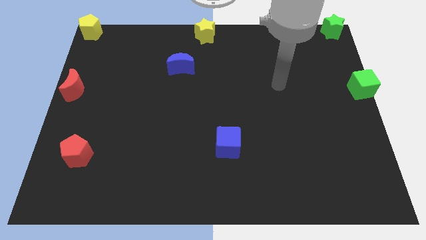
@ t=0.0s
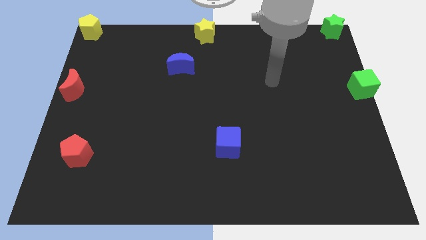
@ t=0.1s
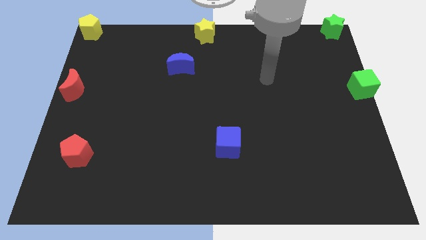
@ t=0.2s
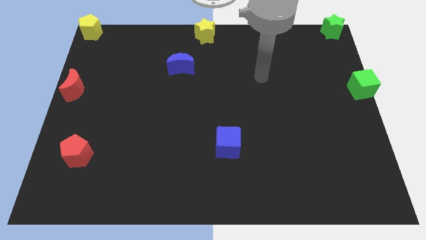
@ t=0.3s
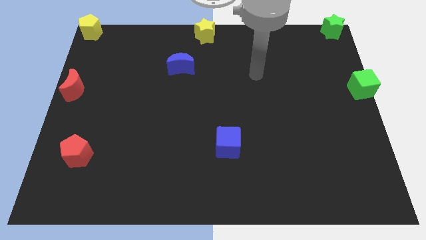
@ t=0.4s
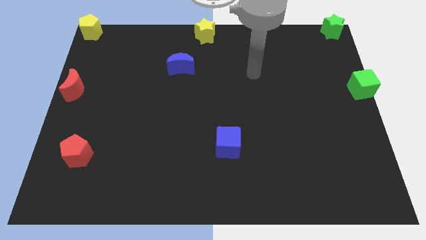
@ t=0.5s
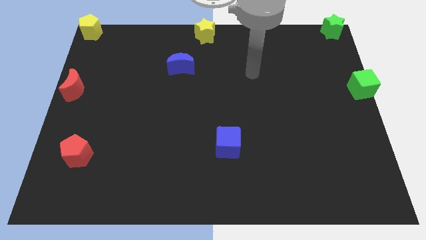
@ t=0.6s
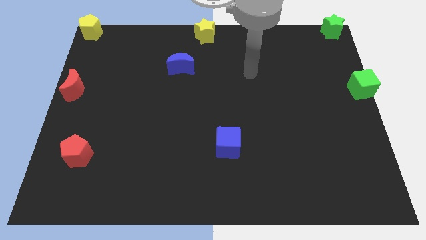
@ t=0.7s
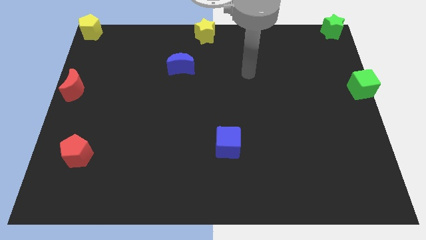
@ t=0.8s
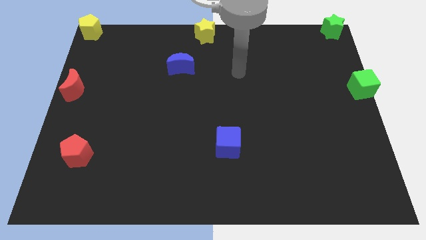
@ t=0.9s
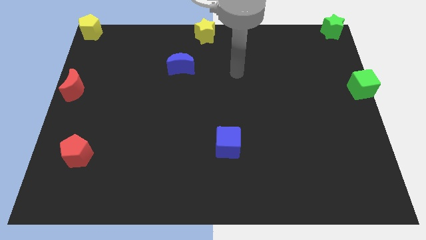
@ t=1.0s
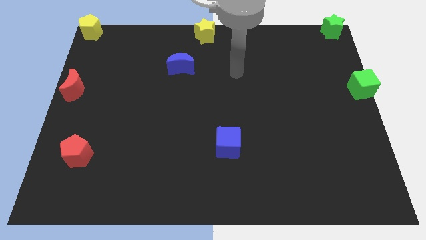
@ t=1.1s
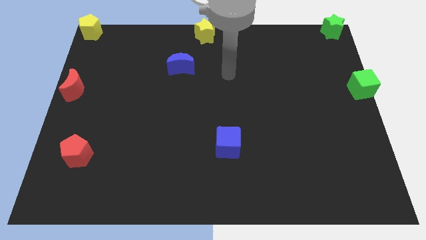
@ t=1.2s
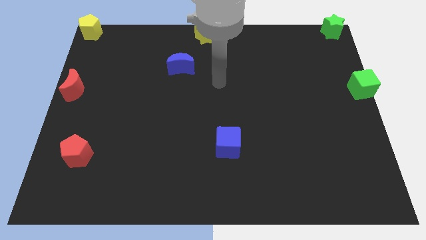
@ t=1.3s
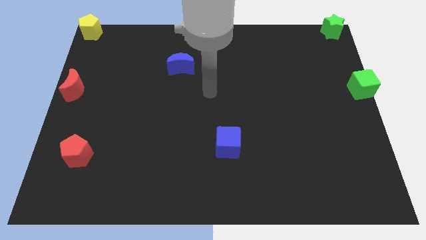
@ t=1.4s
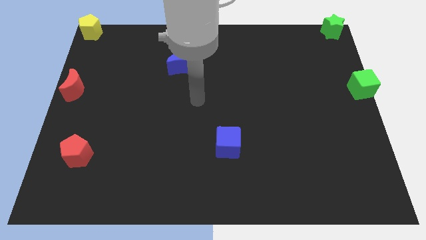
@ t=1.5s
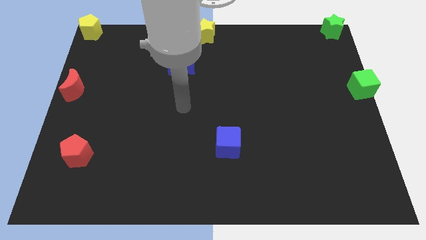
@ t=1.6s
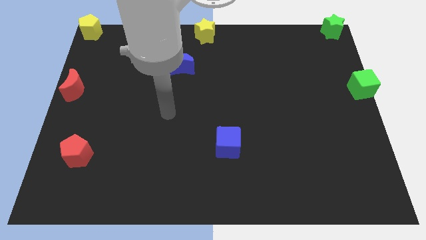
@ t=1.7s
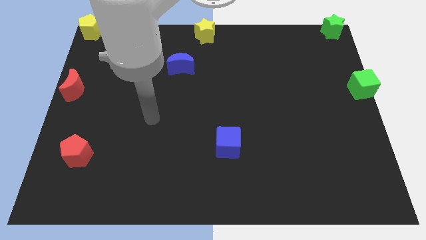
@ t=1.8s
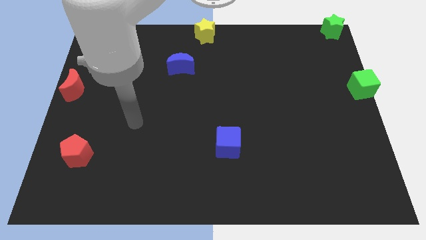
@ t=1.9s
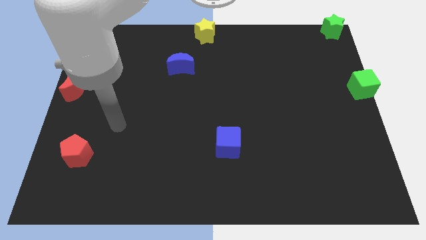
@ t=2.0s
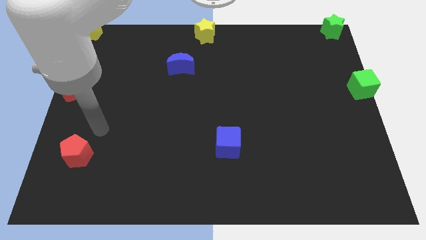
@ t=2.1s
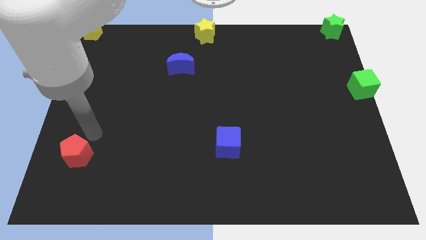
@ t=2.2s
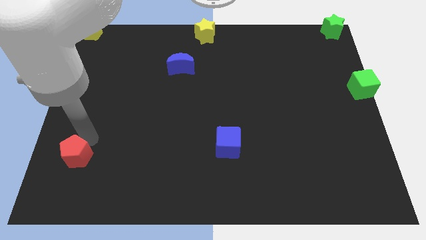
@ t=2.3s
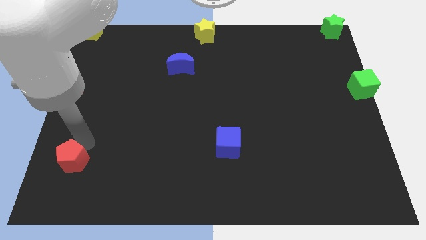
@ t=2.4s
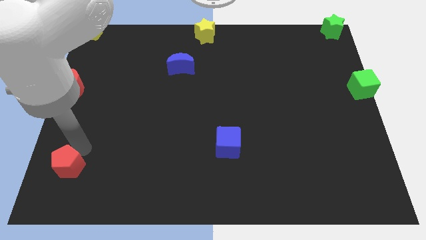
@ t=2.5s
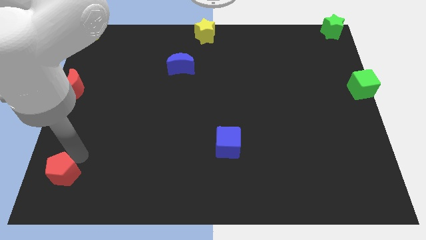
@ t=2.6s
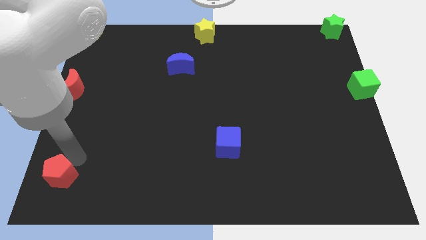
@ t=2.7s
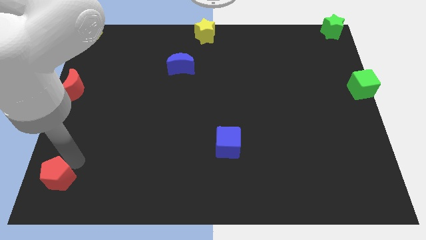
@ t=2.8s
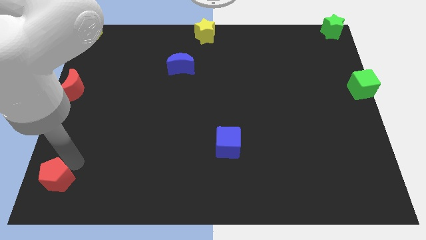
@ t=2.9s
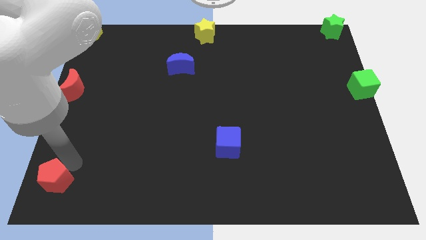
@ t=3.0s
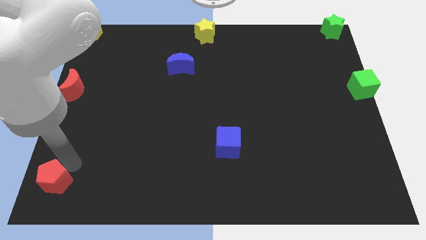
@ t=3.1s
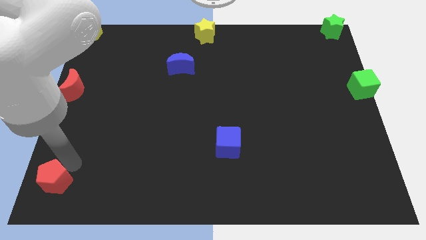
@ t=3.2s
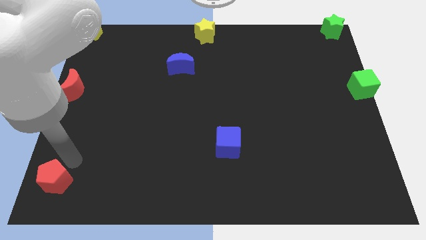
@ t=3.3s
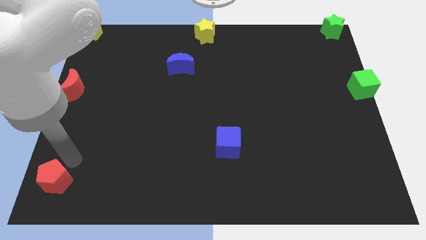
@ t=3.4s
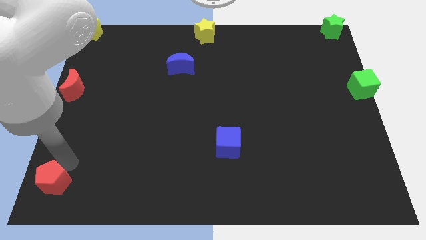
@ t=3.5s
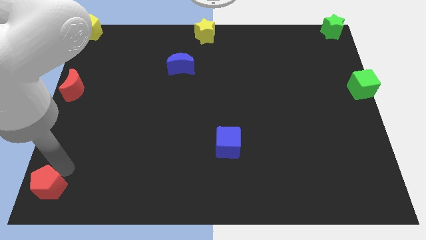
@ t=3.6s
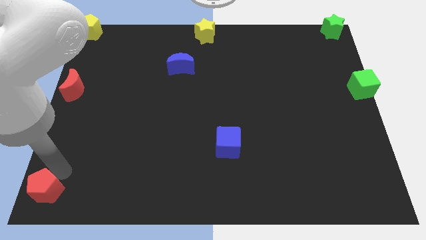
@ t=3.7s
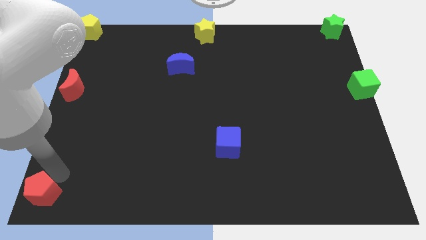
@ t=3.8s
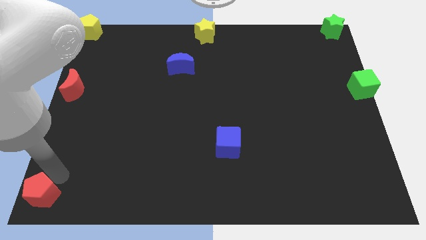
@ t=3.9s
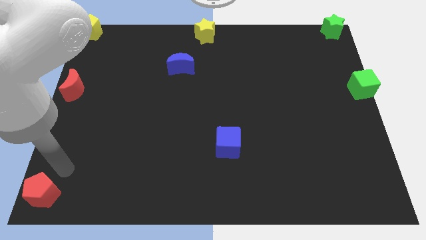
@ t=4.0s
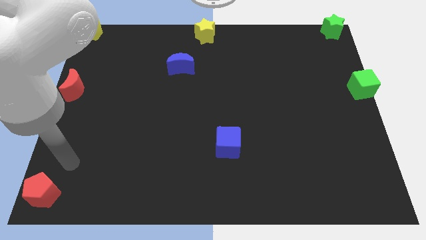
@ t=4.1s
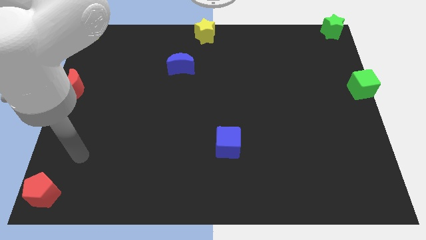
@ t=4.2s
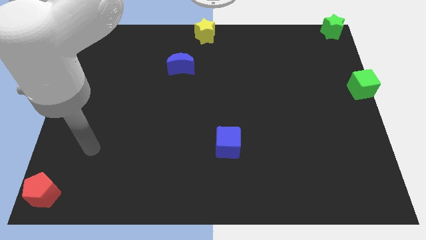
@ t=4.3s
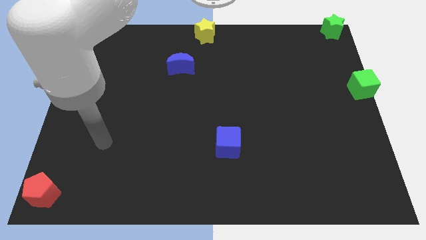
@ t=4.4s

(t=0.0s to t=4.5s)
move the red pentagon to the bottom left corner of the board

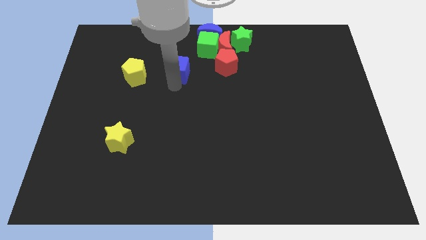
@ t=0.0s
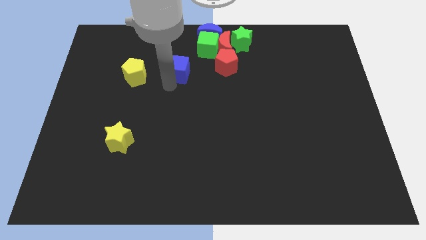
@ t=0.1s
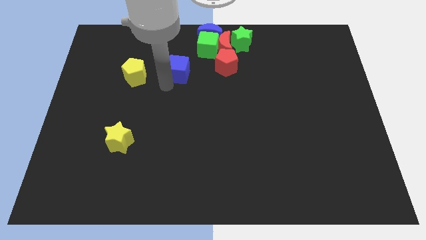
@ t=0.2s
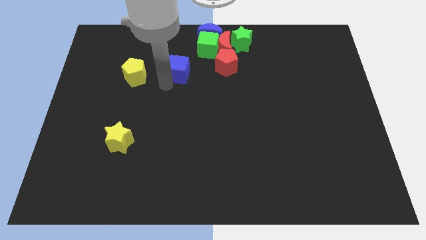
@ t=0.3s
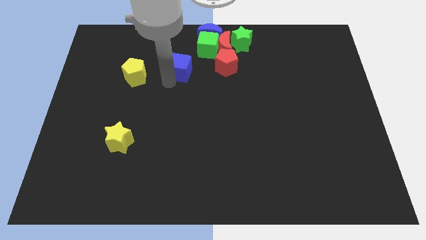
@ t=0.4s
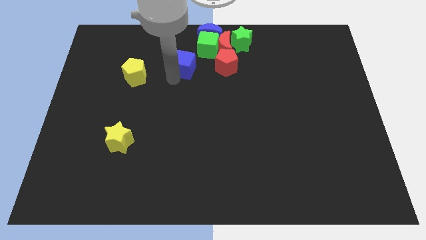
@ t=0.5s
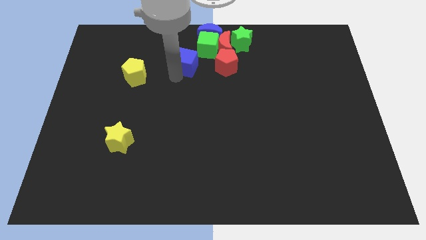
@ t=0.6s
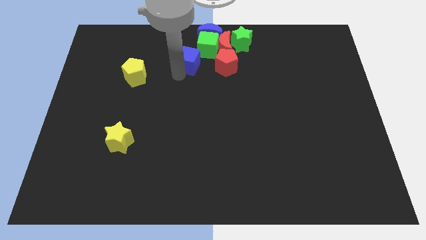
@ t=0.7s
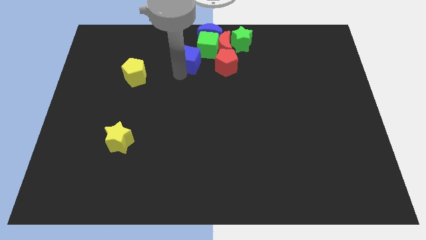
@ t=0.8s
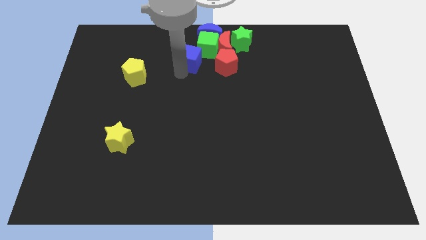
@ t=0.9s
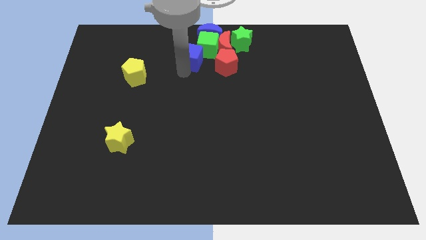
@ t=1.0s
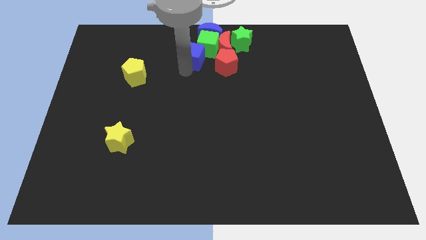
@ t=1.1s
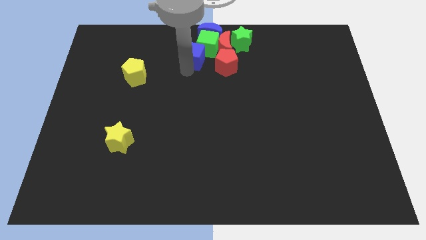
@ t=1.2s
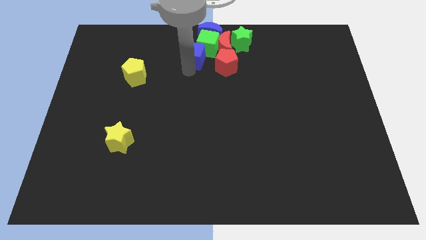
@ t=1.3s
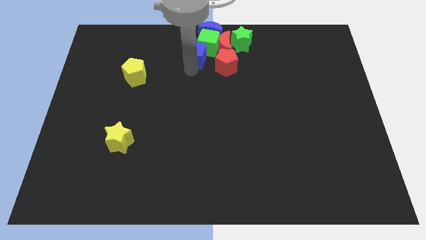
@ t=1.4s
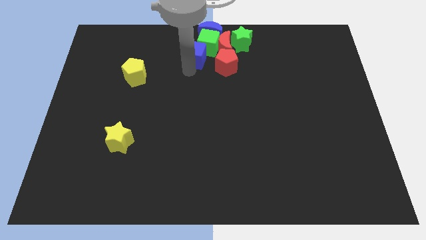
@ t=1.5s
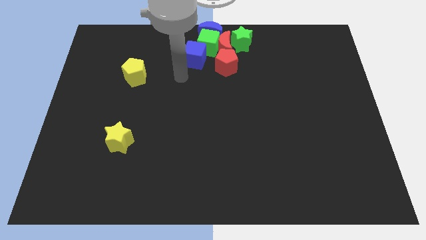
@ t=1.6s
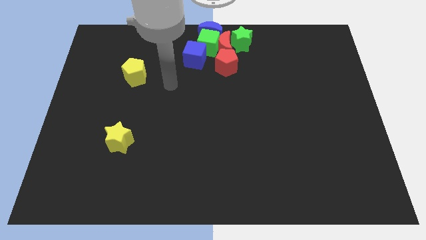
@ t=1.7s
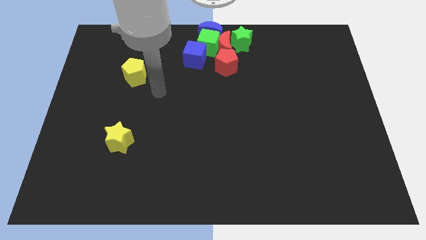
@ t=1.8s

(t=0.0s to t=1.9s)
push the blue cube left below the green cube

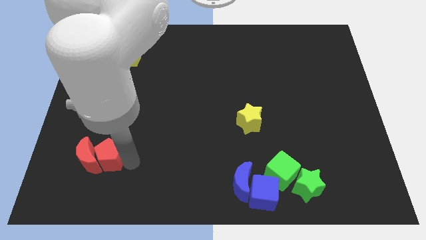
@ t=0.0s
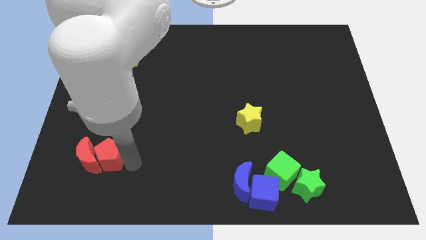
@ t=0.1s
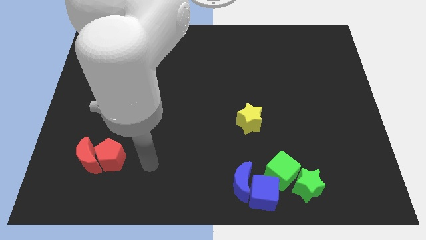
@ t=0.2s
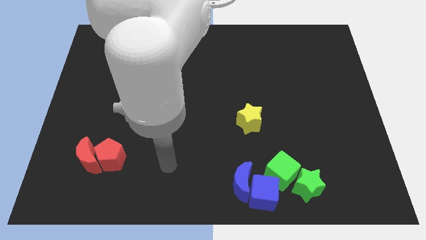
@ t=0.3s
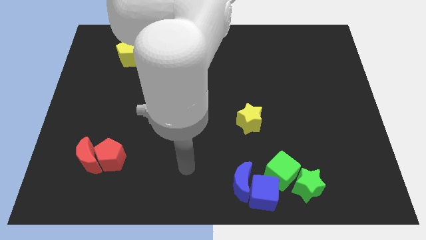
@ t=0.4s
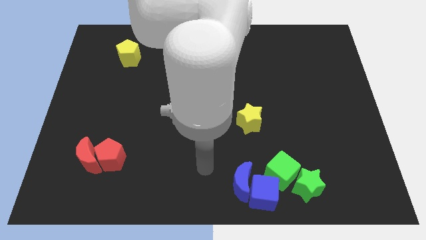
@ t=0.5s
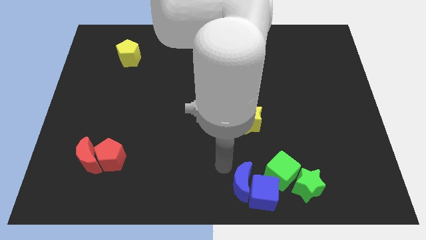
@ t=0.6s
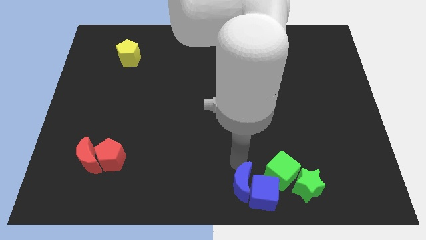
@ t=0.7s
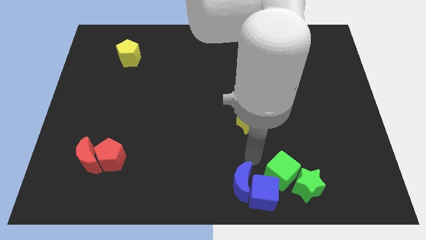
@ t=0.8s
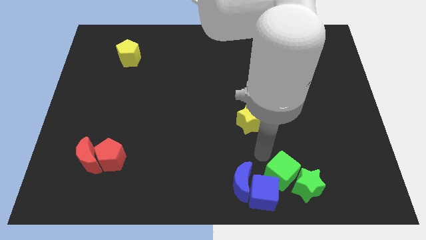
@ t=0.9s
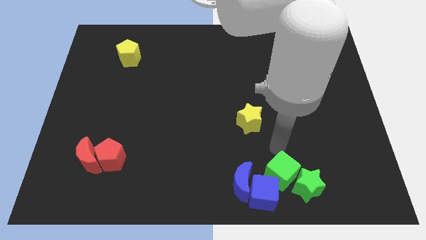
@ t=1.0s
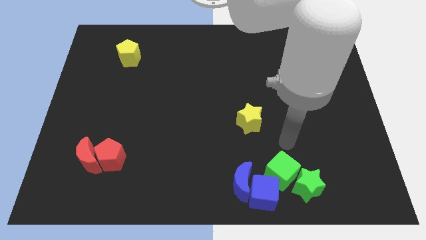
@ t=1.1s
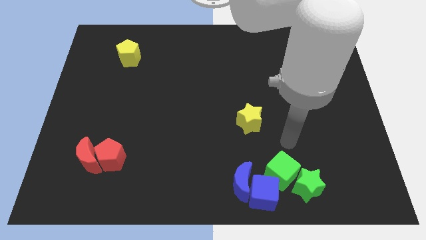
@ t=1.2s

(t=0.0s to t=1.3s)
point your hand at the top side of the green cube

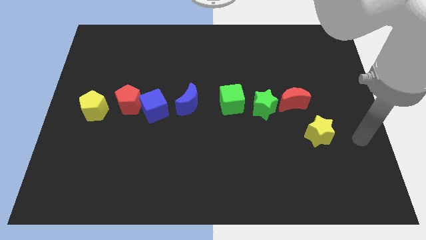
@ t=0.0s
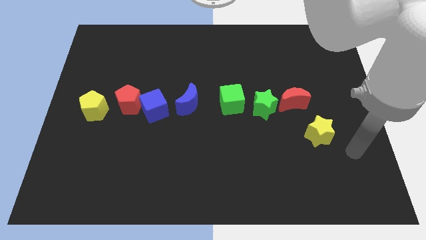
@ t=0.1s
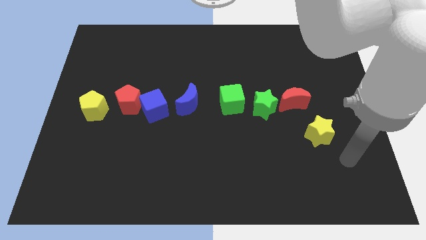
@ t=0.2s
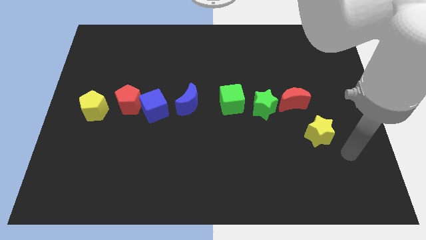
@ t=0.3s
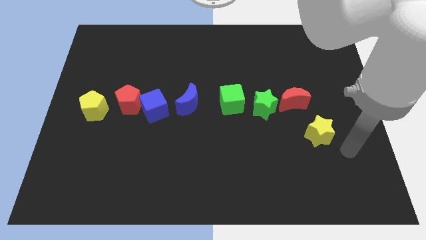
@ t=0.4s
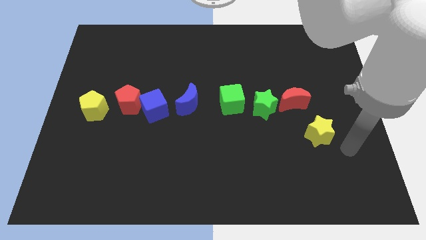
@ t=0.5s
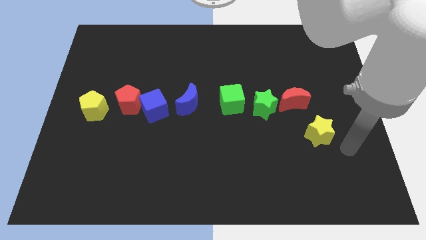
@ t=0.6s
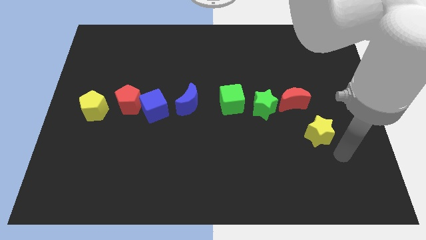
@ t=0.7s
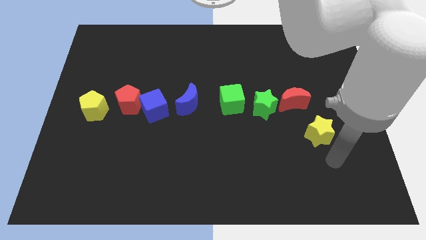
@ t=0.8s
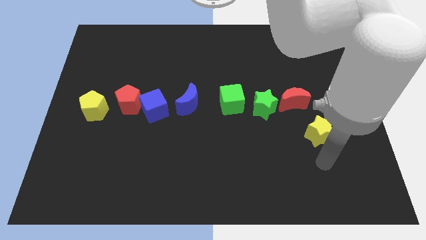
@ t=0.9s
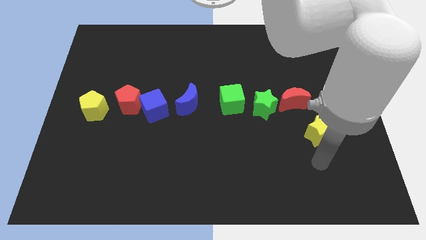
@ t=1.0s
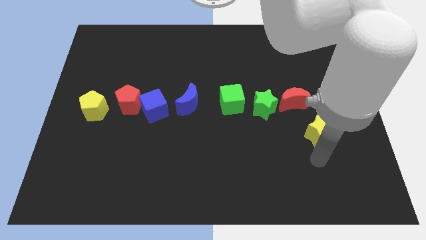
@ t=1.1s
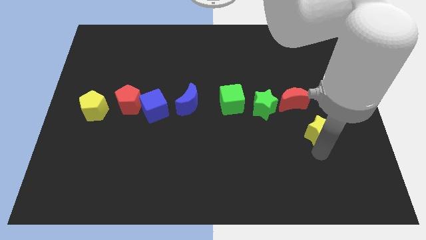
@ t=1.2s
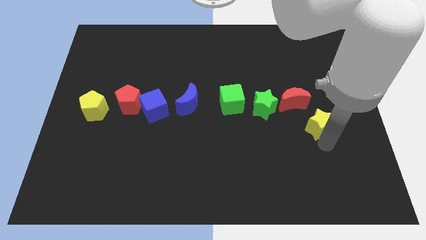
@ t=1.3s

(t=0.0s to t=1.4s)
place the arm down to the yellow star
